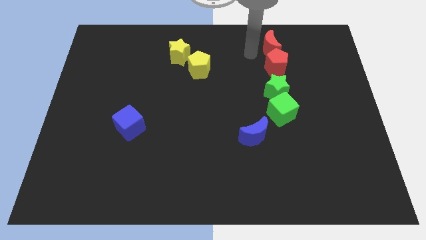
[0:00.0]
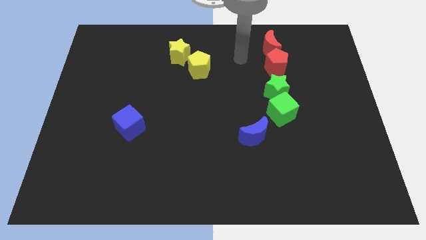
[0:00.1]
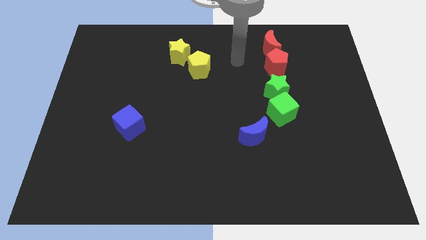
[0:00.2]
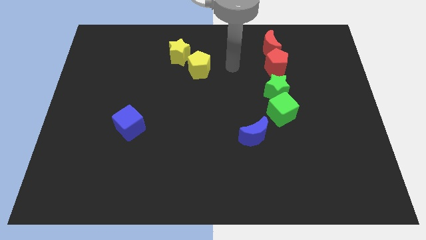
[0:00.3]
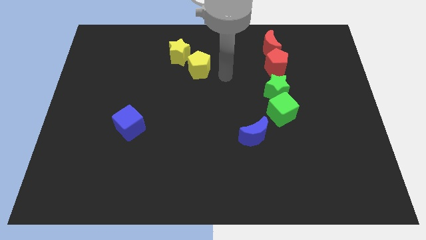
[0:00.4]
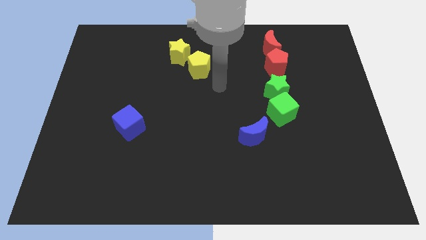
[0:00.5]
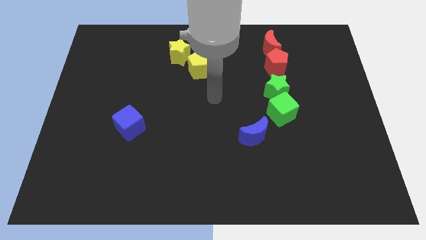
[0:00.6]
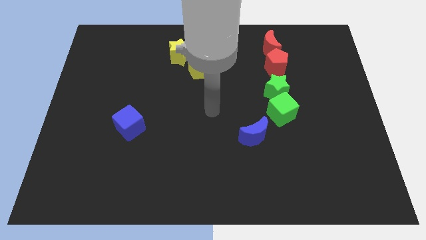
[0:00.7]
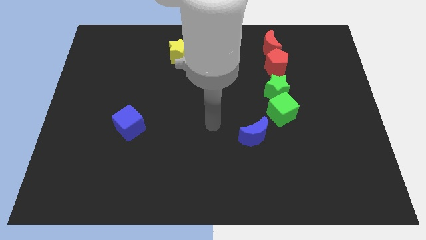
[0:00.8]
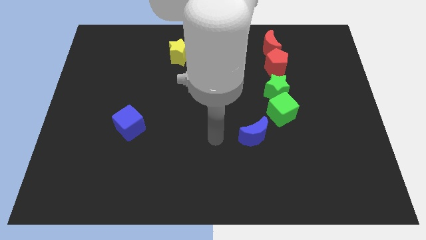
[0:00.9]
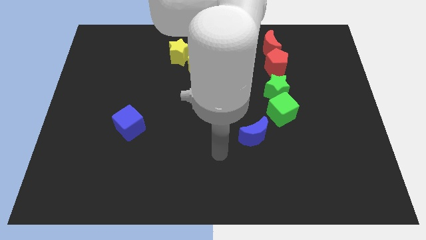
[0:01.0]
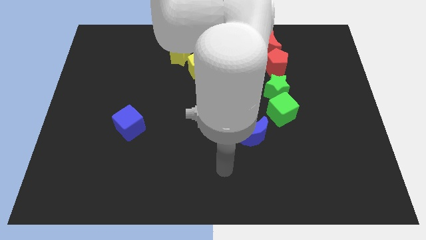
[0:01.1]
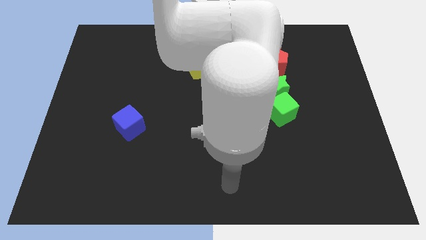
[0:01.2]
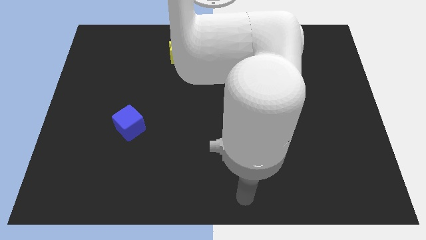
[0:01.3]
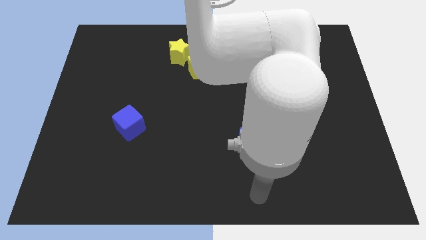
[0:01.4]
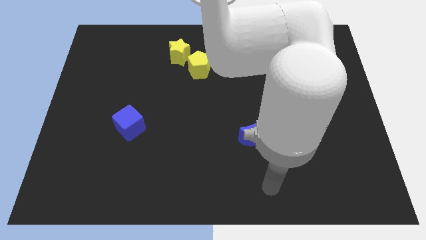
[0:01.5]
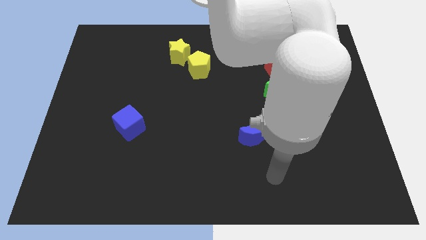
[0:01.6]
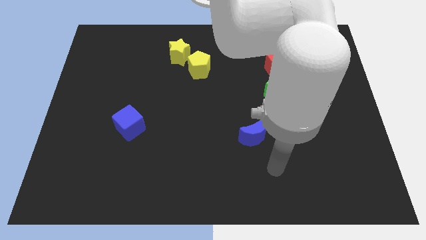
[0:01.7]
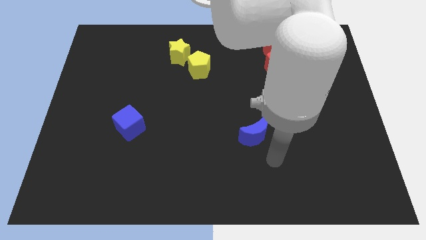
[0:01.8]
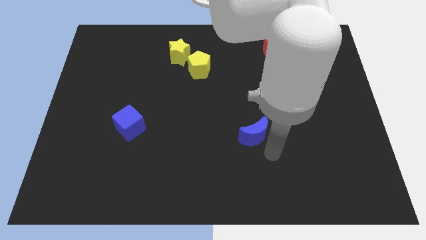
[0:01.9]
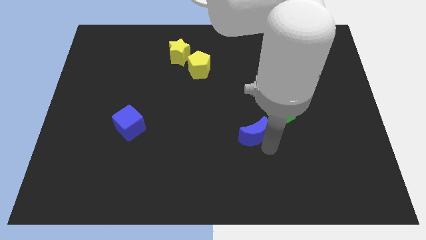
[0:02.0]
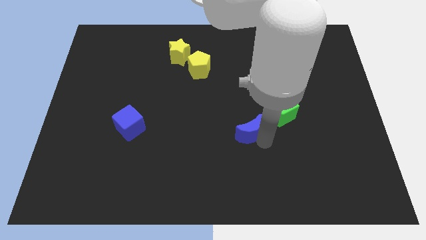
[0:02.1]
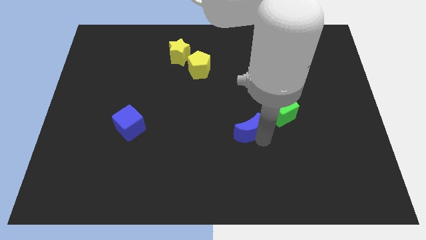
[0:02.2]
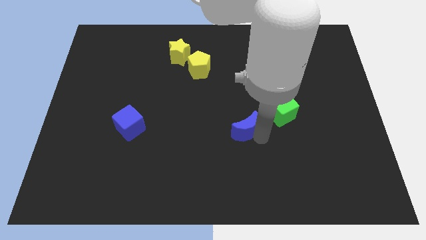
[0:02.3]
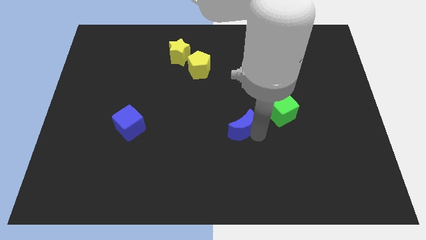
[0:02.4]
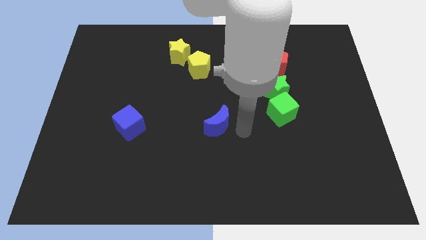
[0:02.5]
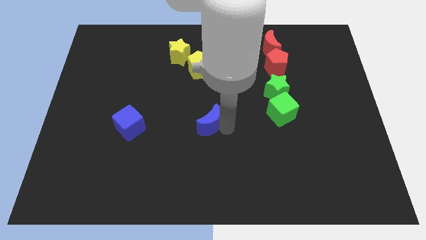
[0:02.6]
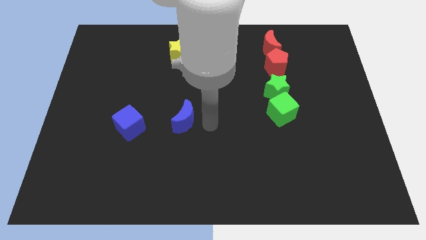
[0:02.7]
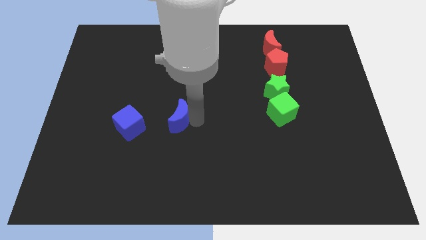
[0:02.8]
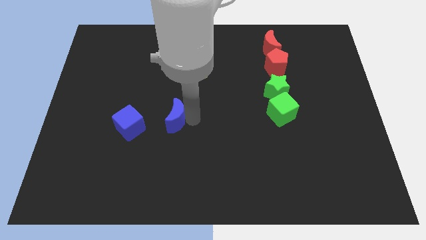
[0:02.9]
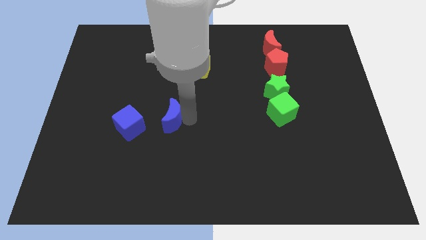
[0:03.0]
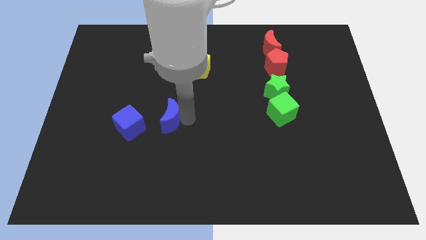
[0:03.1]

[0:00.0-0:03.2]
slide the blue moon close to the blue cube

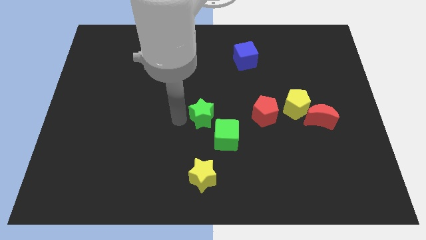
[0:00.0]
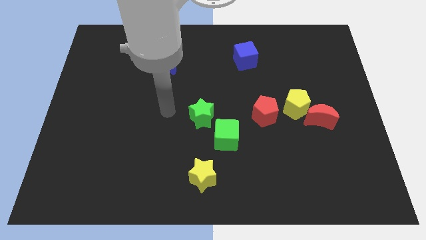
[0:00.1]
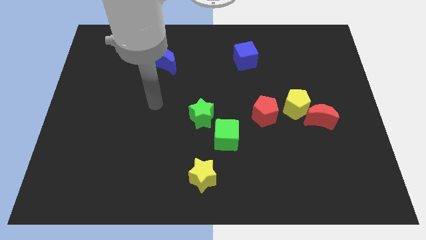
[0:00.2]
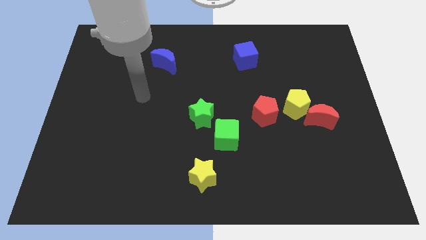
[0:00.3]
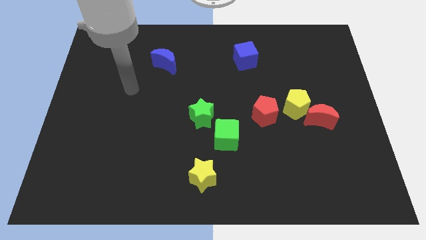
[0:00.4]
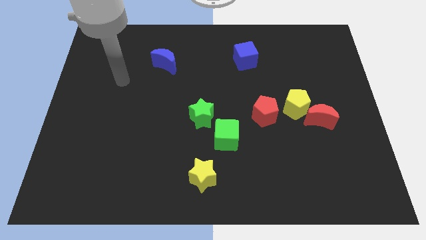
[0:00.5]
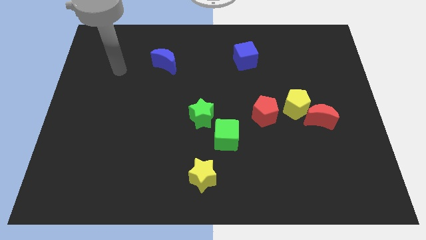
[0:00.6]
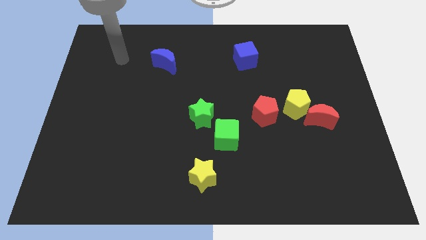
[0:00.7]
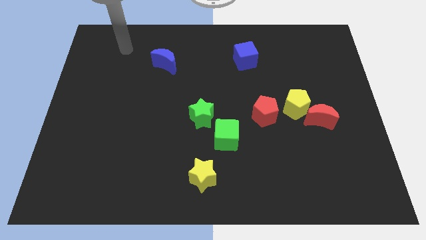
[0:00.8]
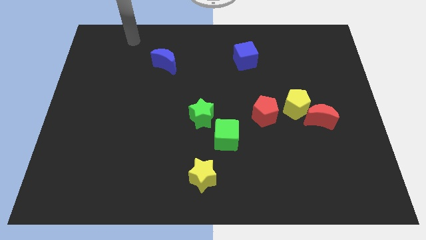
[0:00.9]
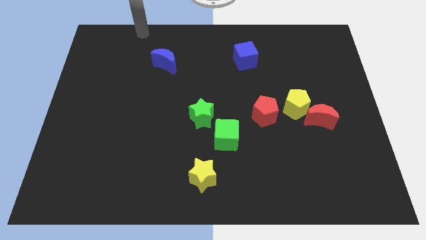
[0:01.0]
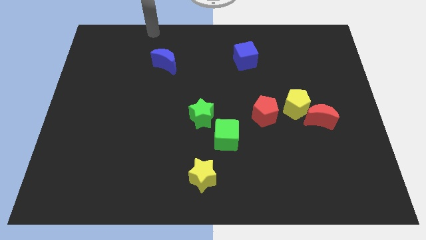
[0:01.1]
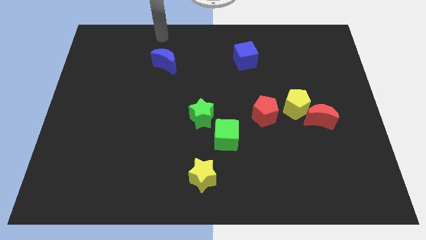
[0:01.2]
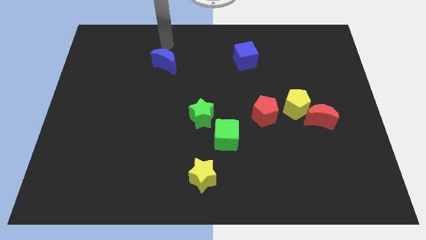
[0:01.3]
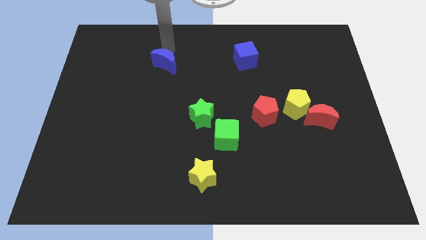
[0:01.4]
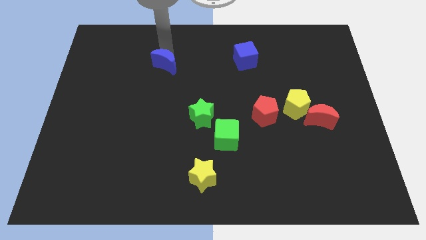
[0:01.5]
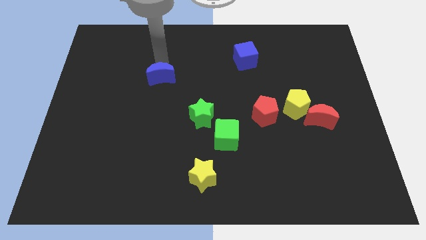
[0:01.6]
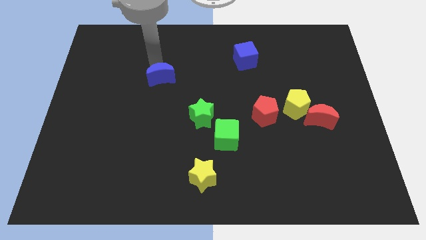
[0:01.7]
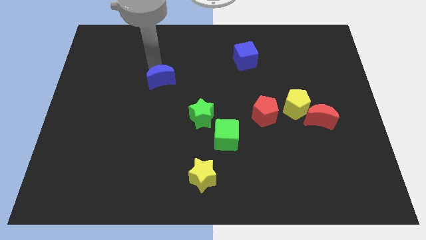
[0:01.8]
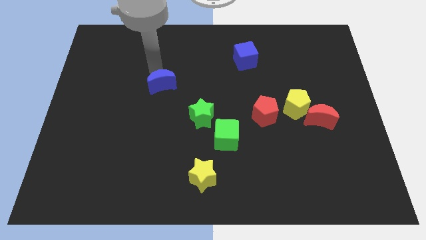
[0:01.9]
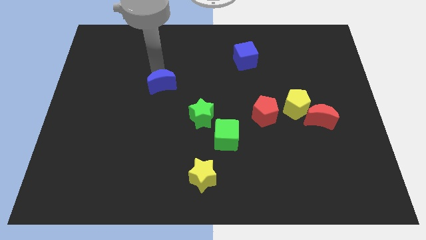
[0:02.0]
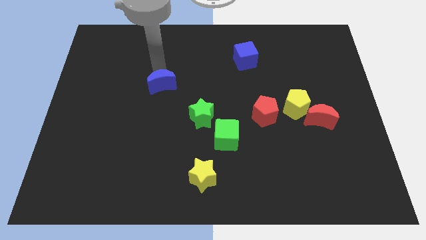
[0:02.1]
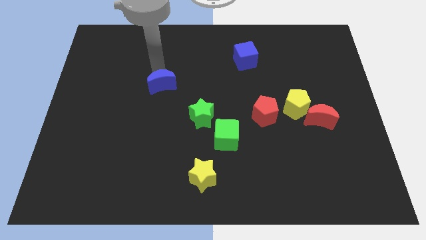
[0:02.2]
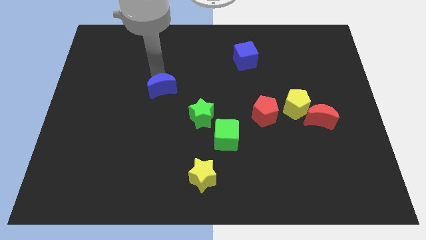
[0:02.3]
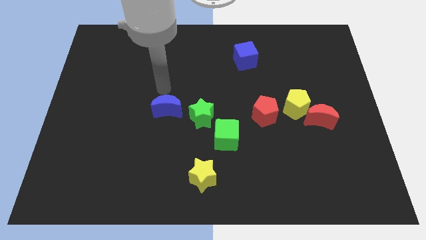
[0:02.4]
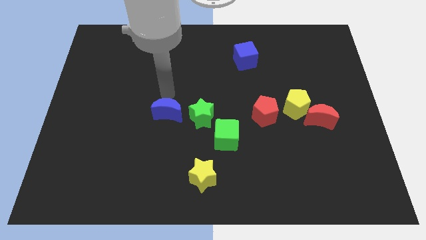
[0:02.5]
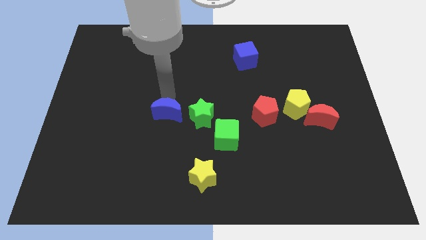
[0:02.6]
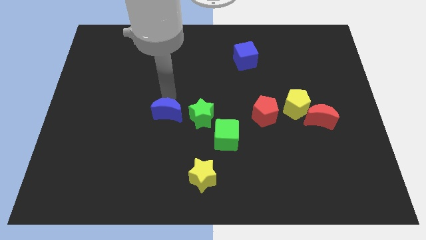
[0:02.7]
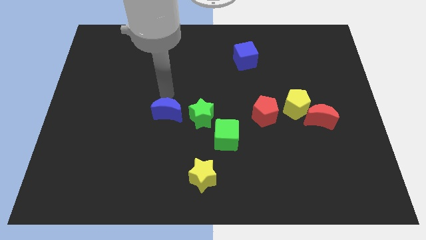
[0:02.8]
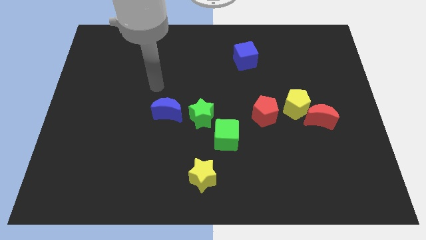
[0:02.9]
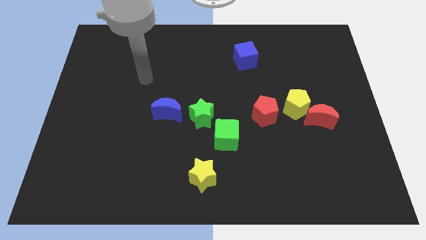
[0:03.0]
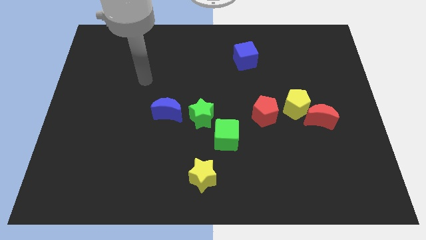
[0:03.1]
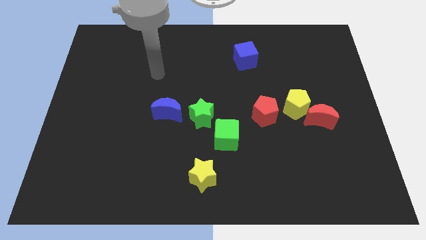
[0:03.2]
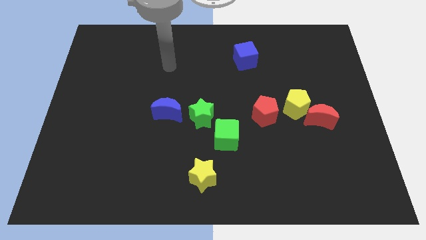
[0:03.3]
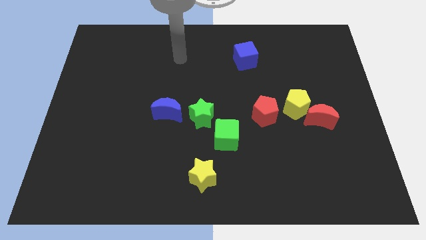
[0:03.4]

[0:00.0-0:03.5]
put the blue moon to the left side of green star

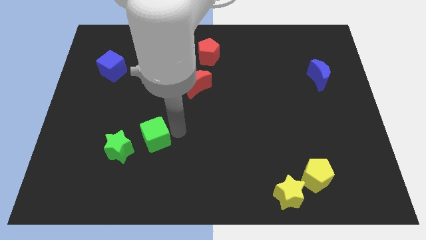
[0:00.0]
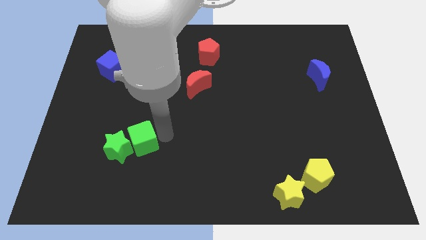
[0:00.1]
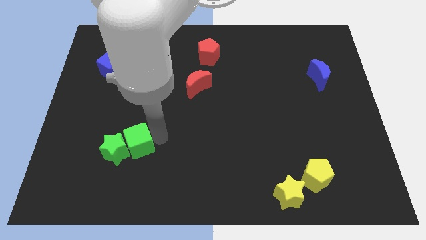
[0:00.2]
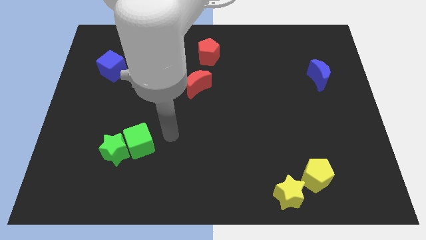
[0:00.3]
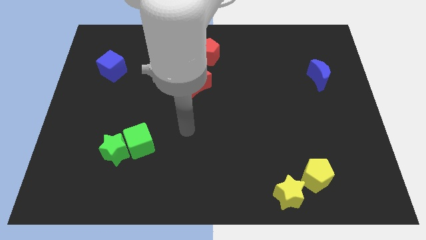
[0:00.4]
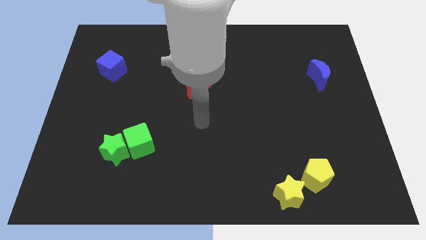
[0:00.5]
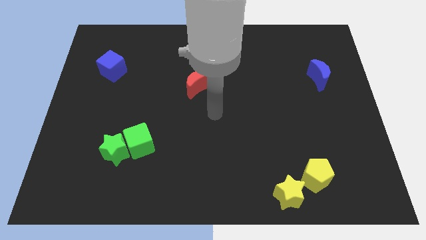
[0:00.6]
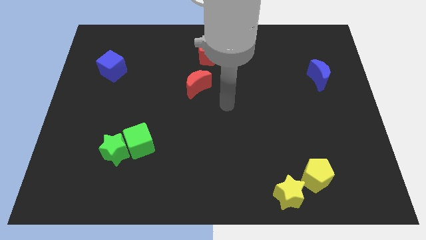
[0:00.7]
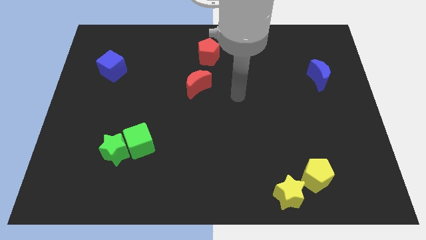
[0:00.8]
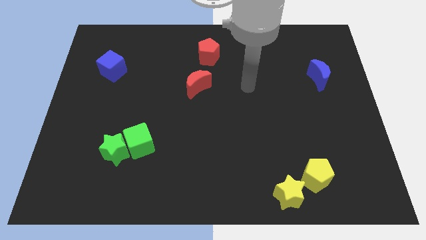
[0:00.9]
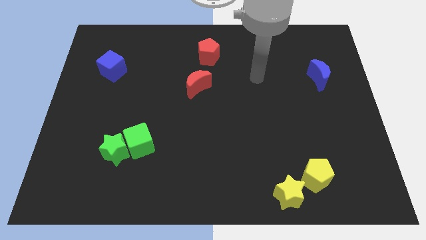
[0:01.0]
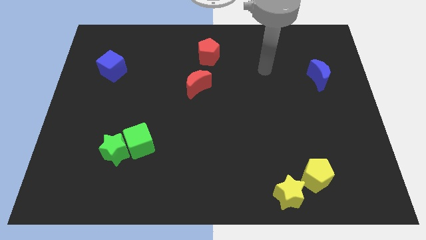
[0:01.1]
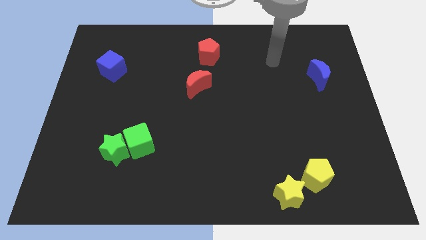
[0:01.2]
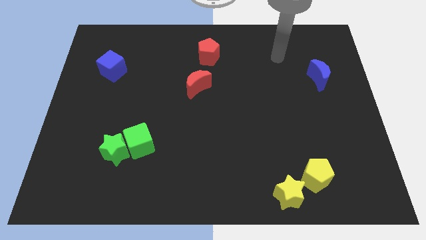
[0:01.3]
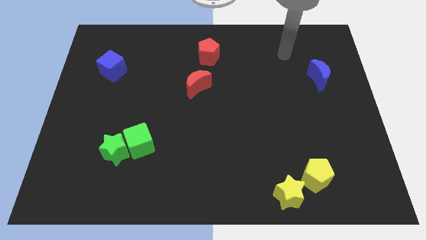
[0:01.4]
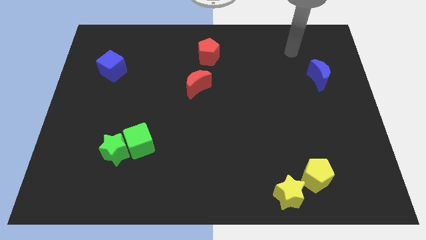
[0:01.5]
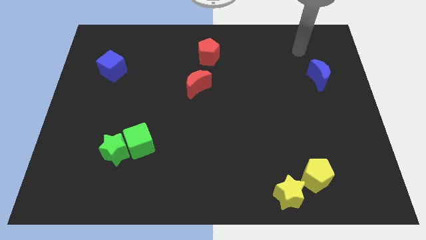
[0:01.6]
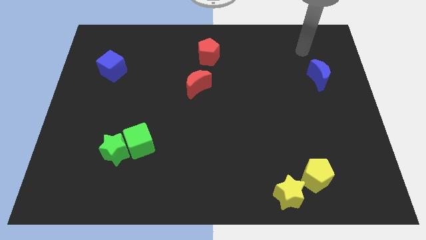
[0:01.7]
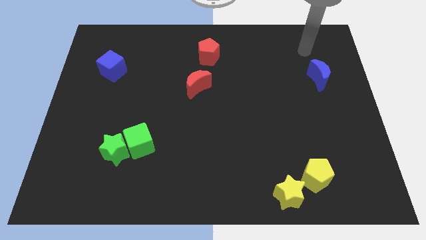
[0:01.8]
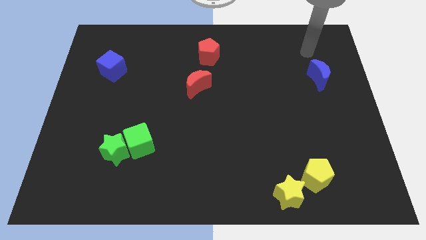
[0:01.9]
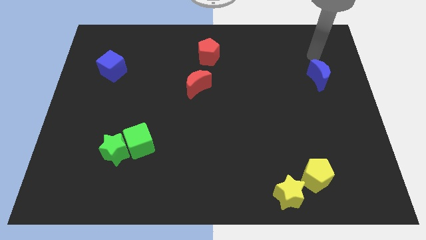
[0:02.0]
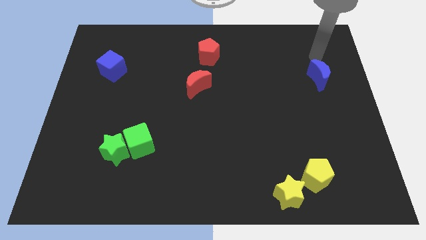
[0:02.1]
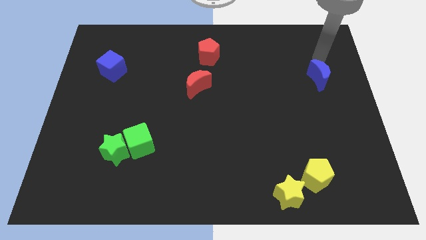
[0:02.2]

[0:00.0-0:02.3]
move your hand away from the green blocks
